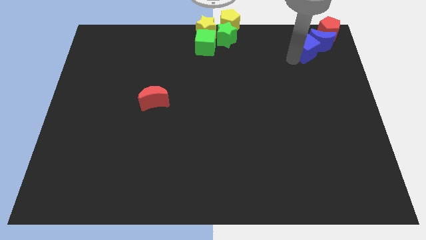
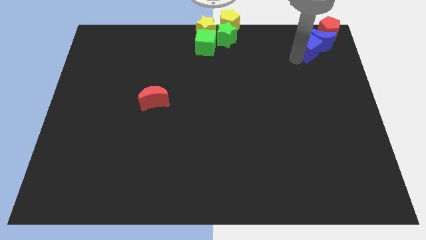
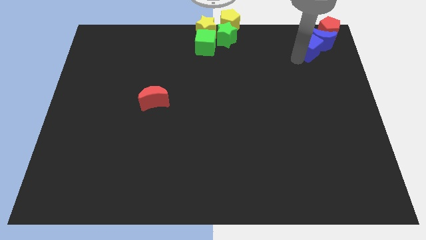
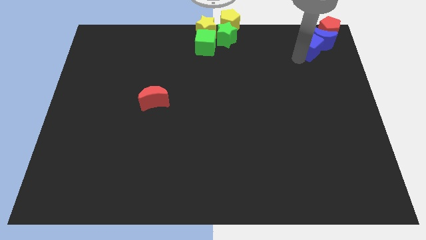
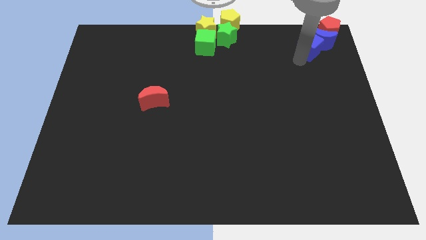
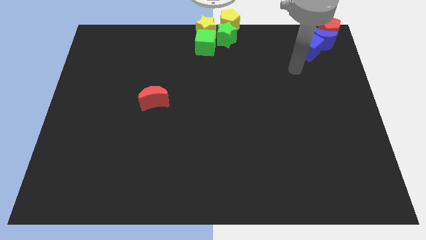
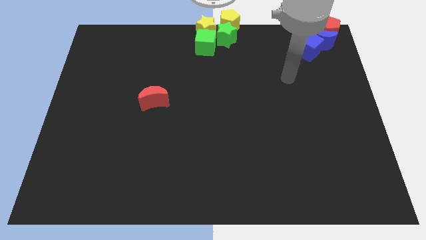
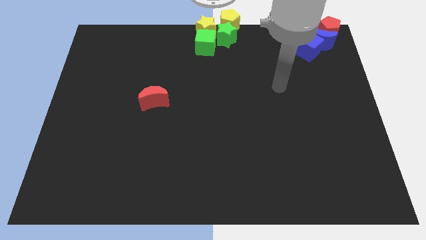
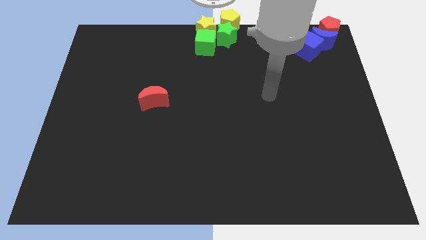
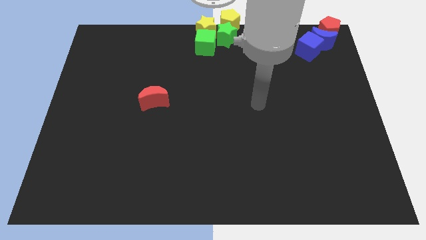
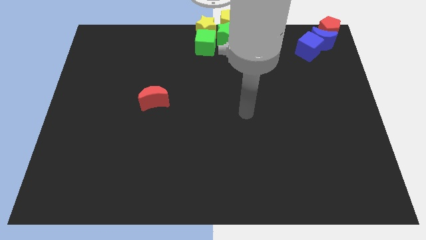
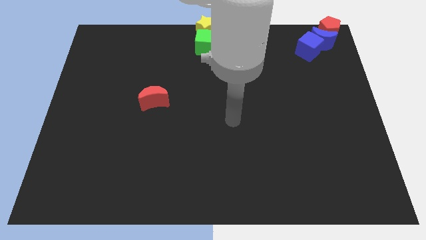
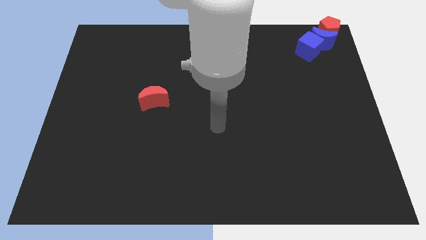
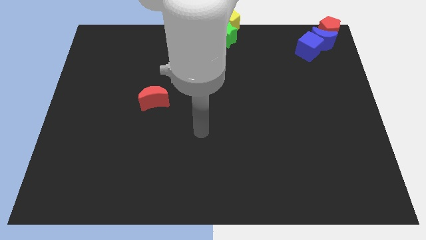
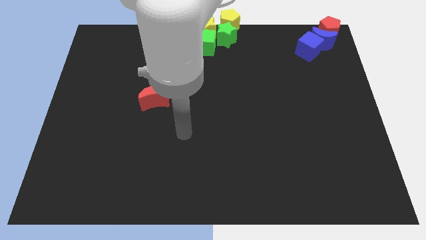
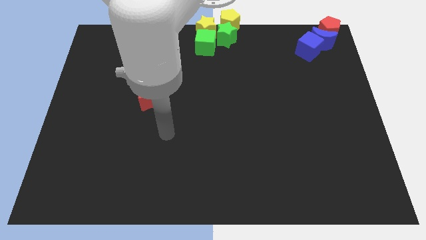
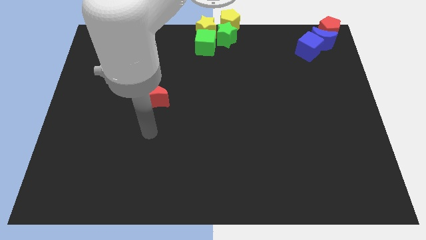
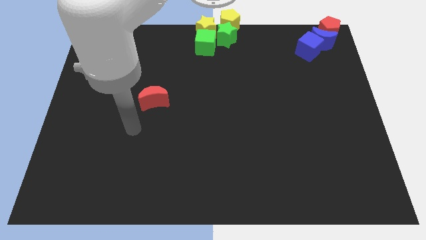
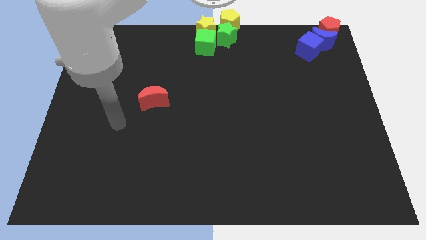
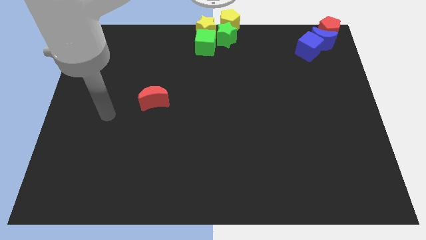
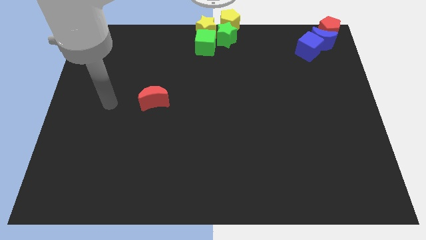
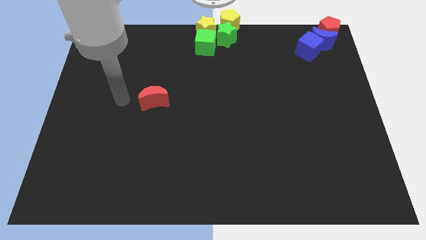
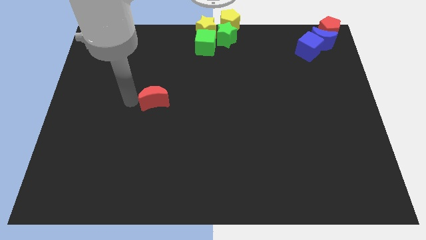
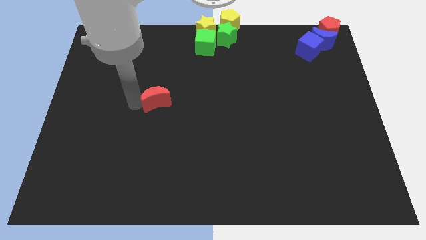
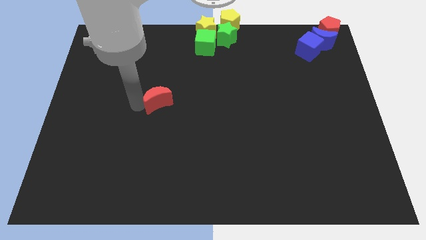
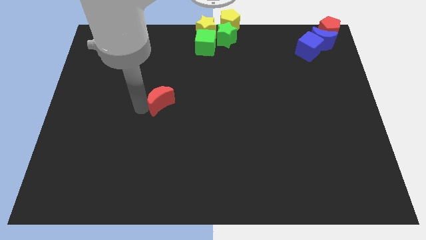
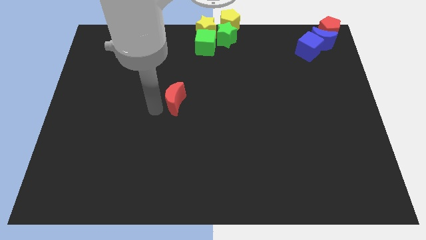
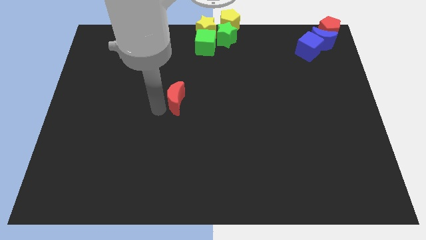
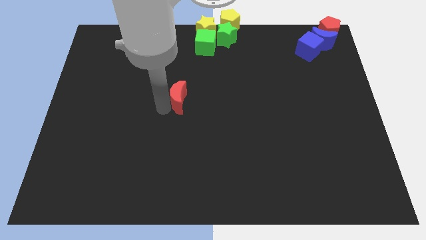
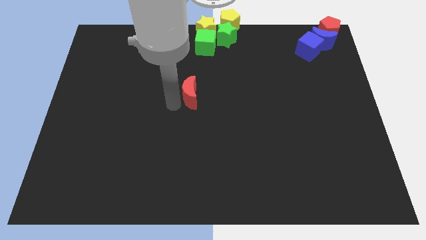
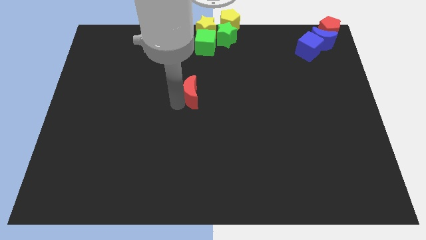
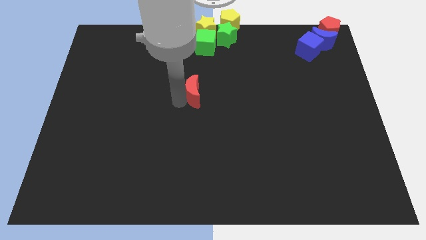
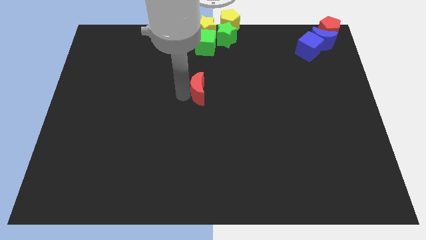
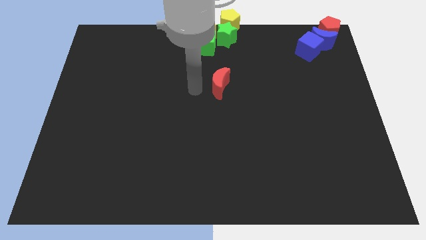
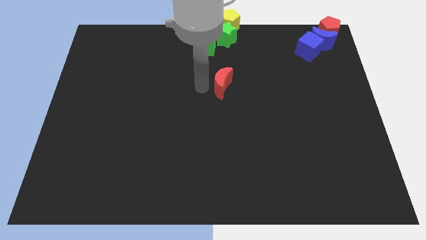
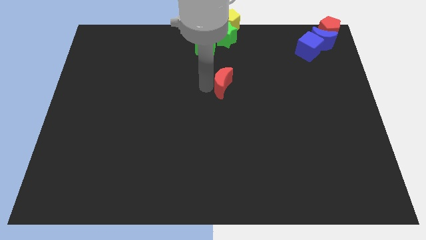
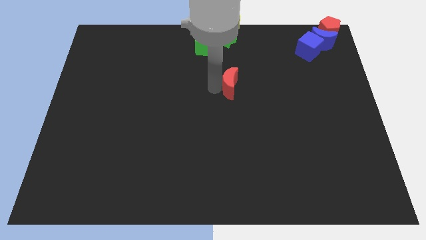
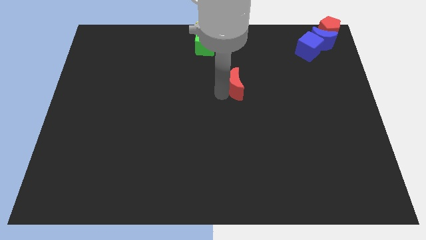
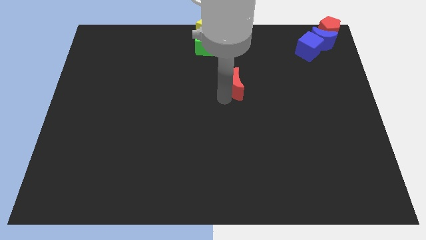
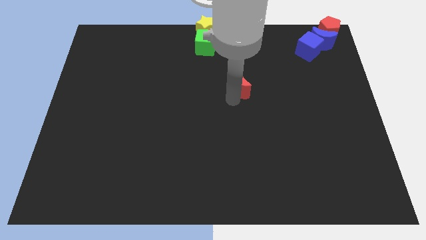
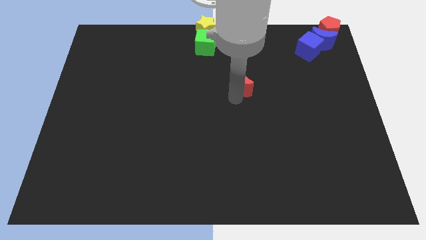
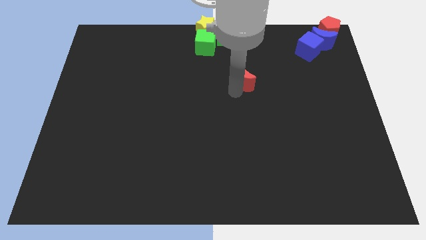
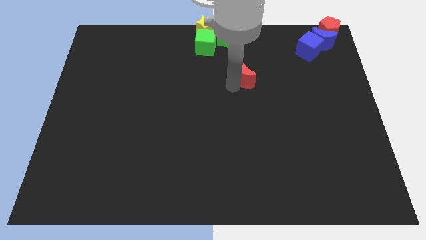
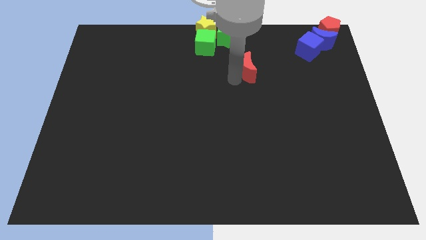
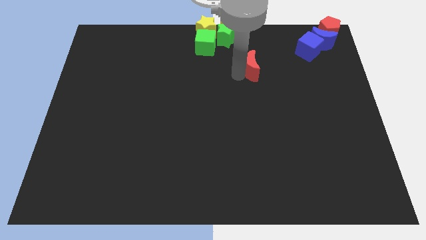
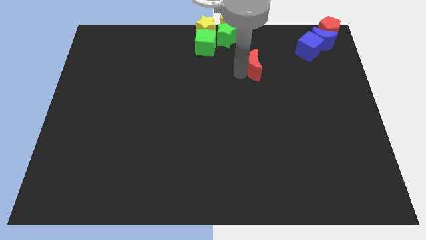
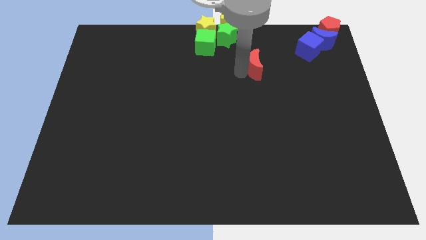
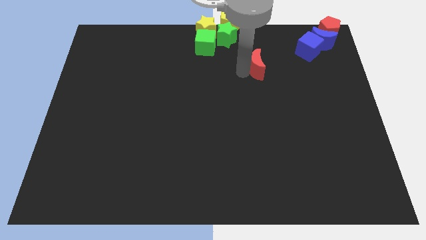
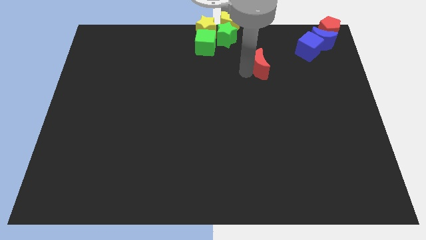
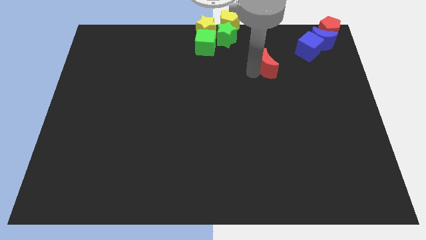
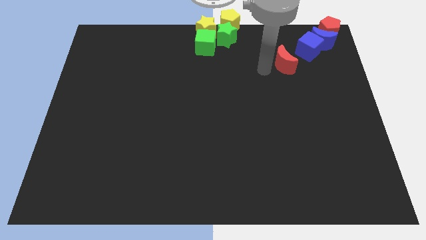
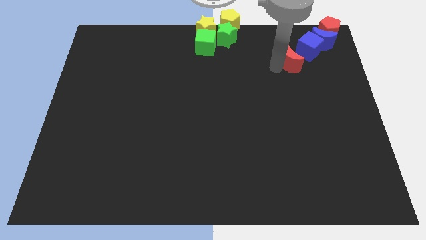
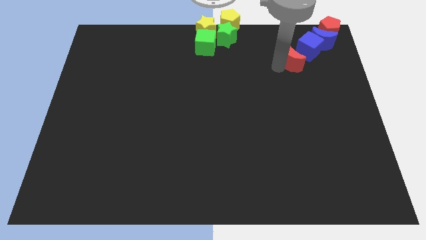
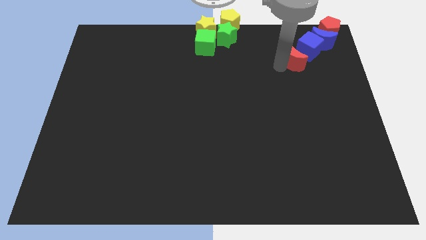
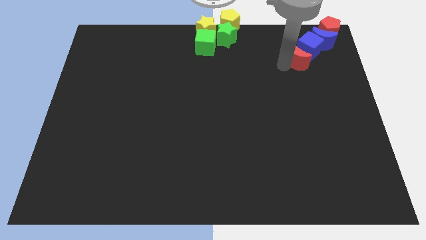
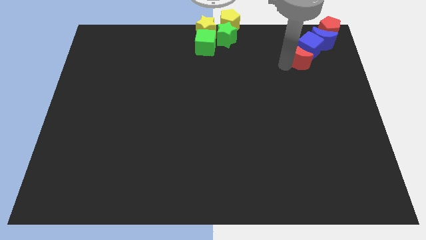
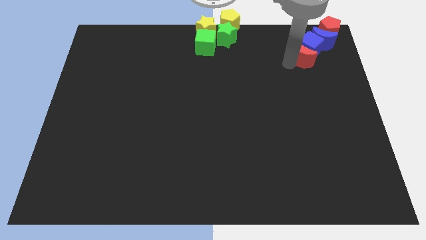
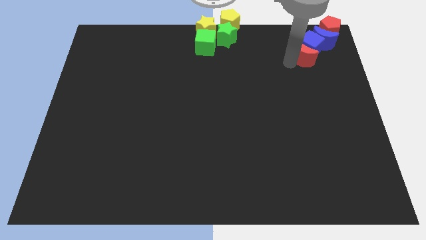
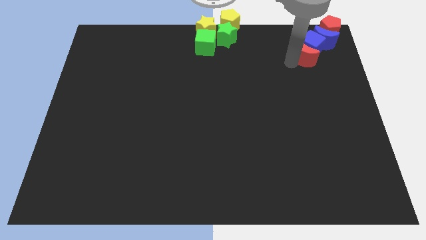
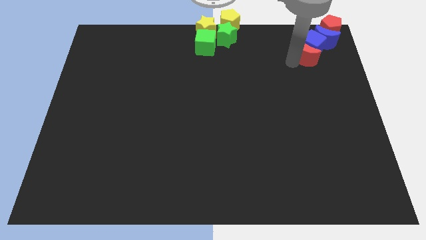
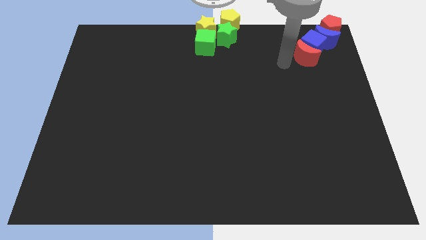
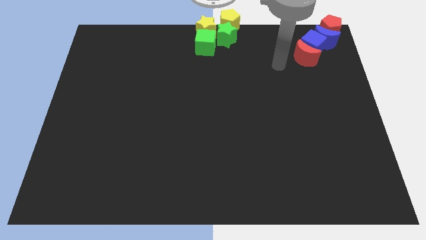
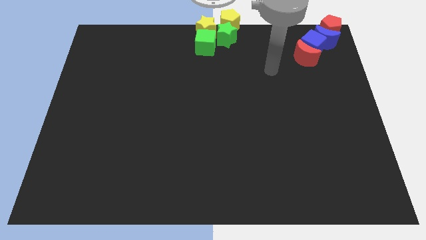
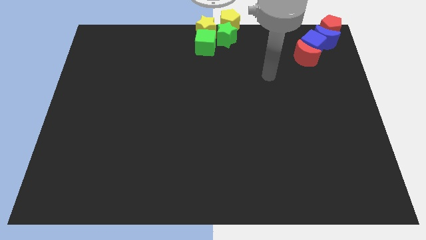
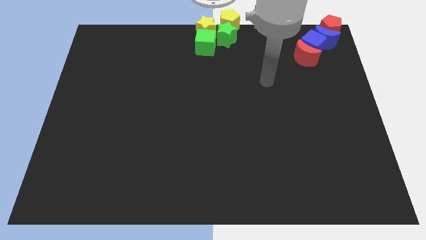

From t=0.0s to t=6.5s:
push the red moon towards the bottom side of the blue cube

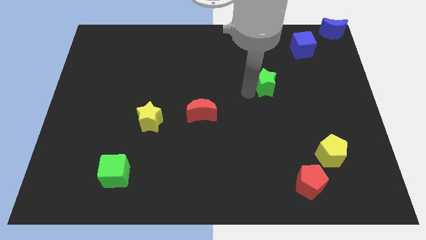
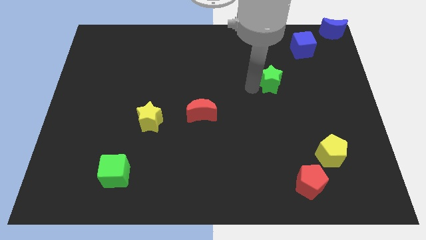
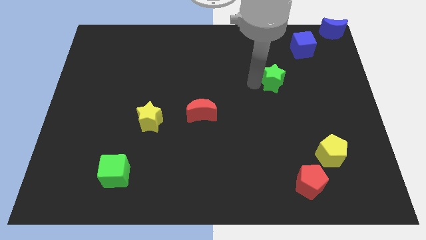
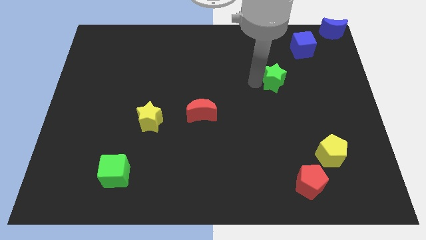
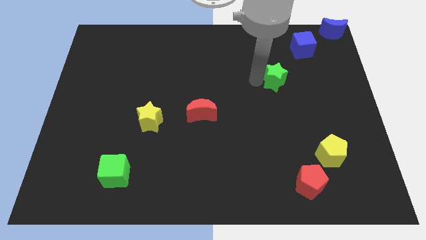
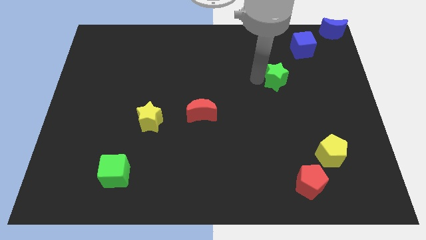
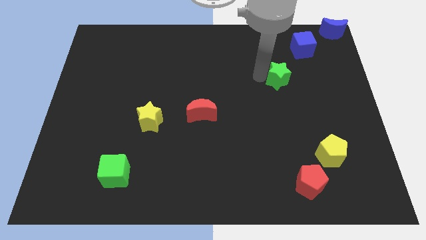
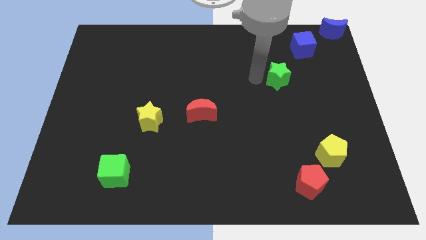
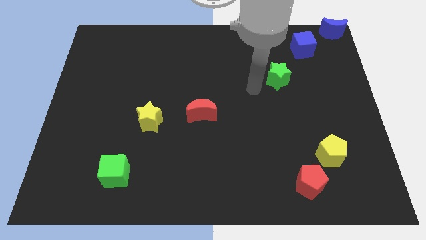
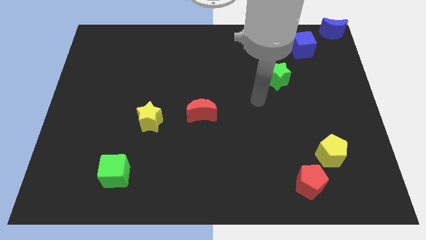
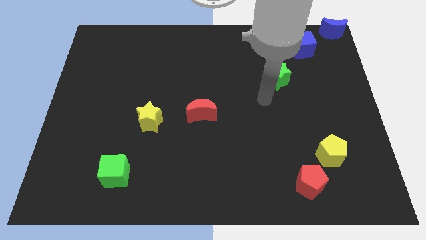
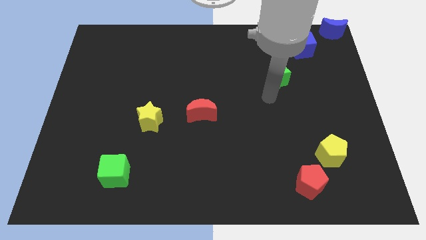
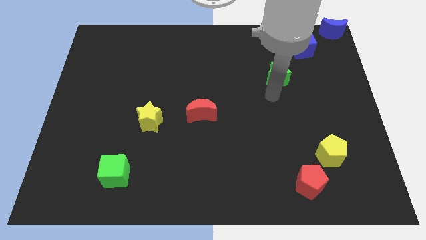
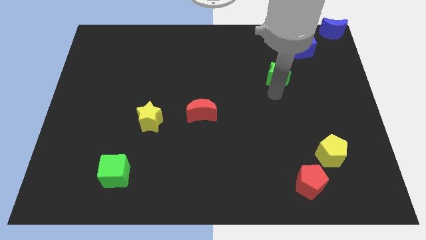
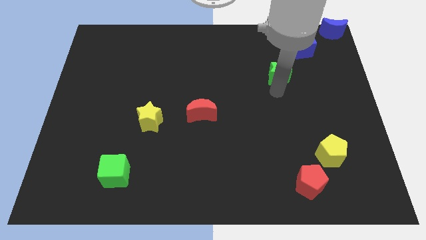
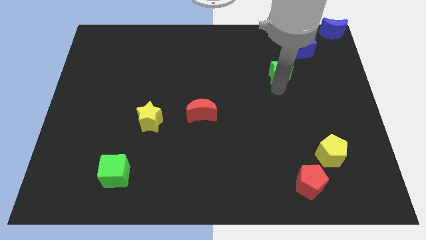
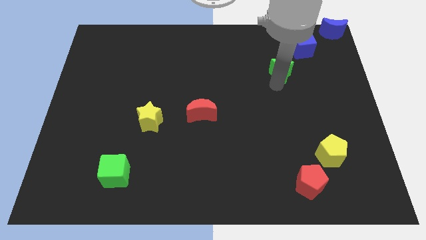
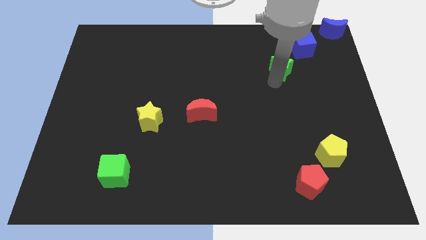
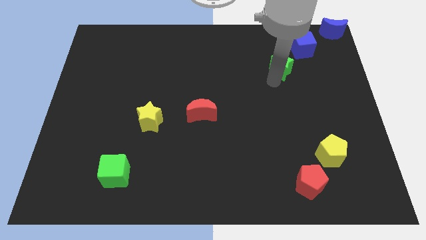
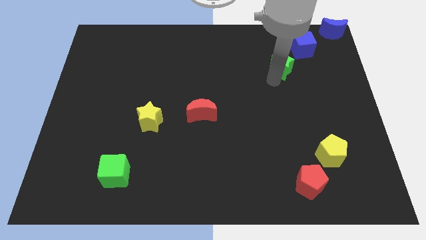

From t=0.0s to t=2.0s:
slide the green star close to the blue cube

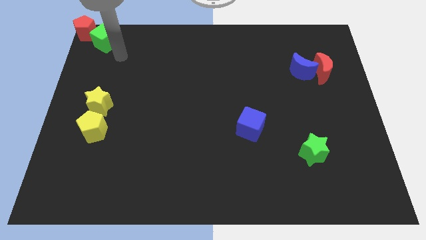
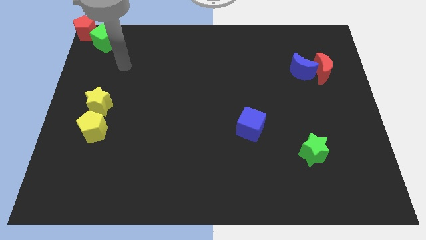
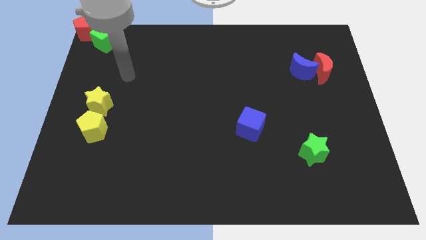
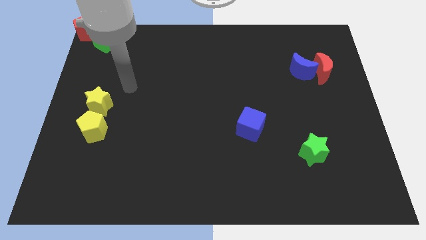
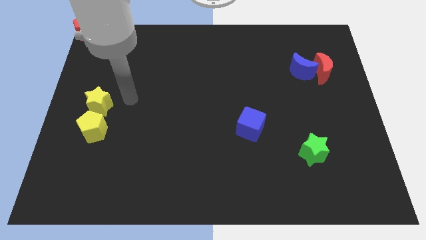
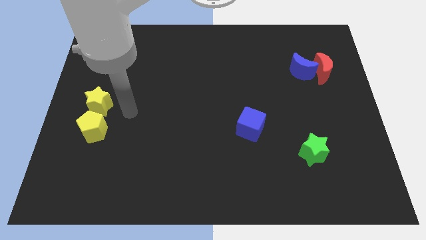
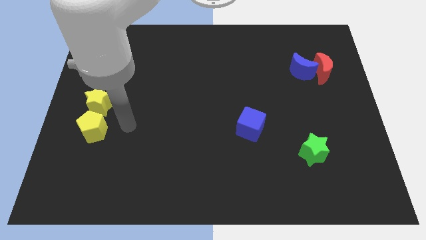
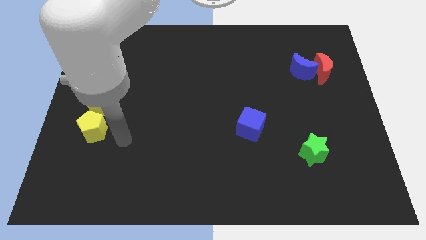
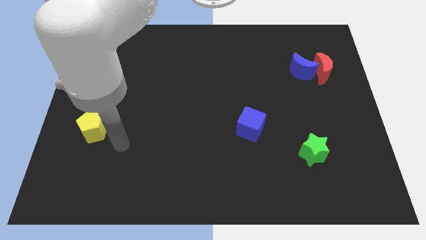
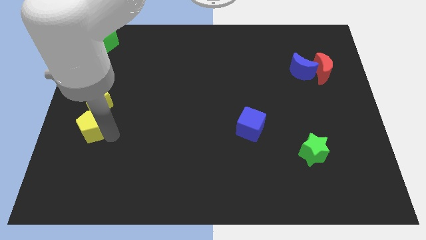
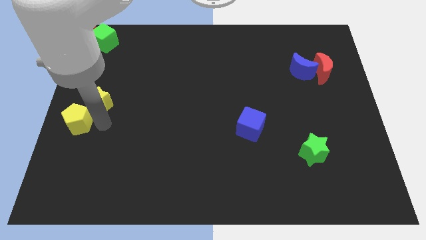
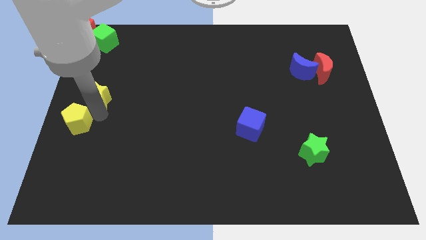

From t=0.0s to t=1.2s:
place the arm below the yellow star
